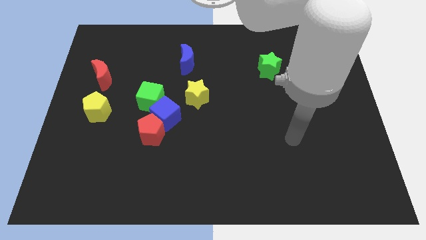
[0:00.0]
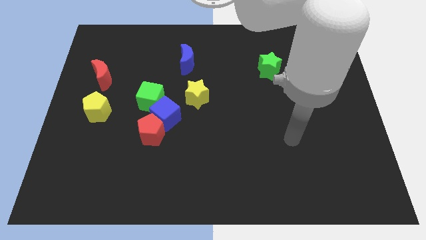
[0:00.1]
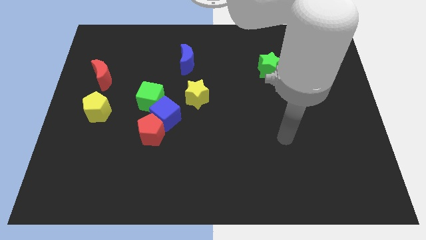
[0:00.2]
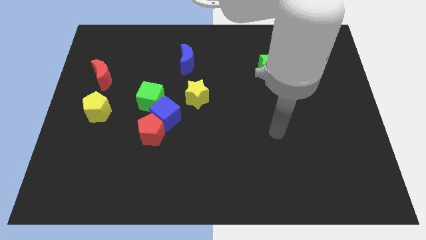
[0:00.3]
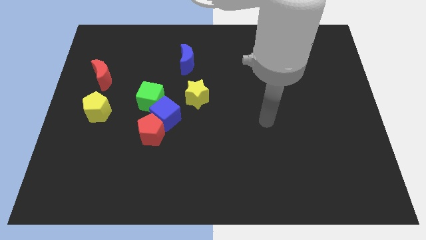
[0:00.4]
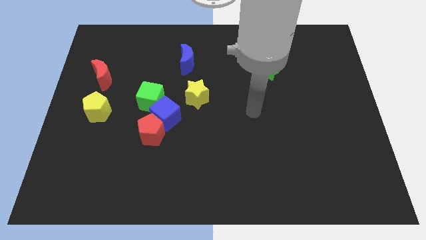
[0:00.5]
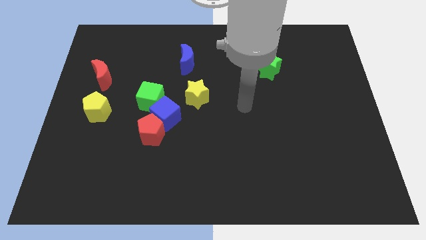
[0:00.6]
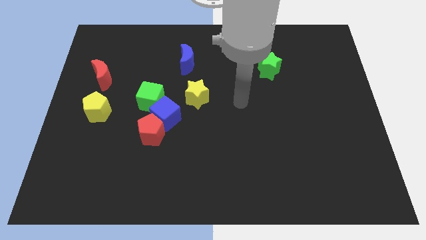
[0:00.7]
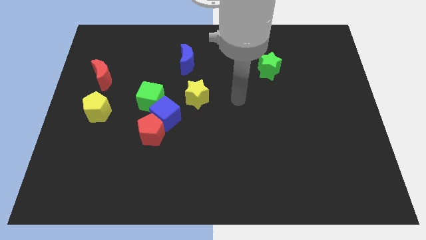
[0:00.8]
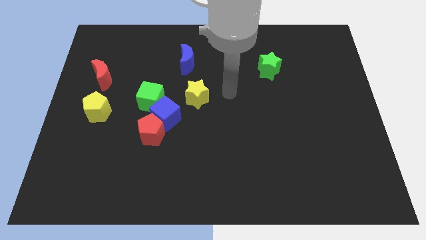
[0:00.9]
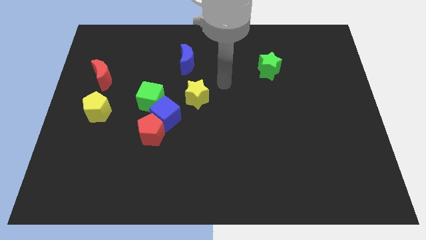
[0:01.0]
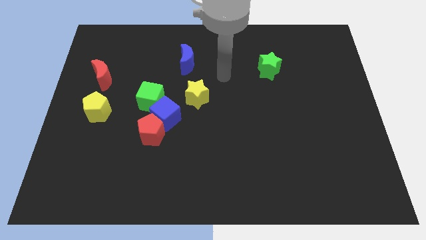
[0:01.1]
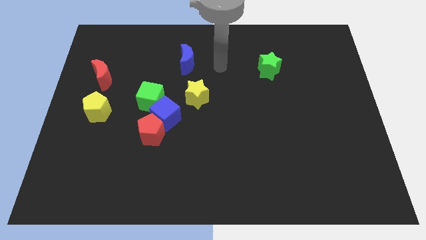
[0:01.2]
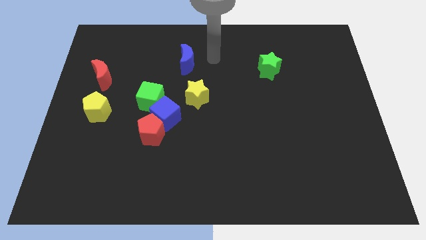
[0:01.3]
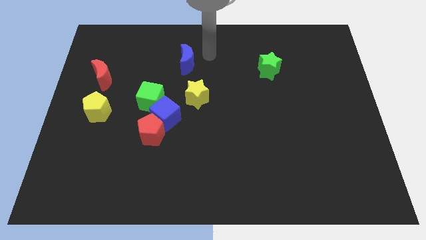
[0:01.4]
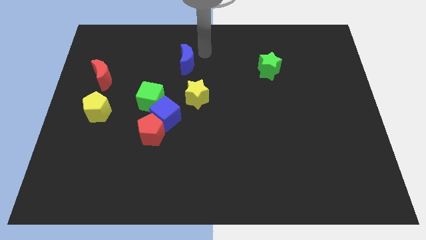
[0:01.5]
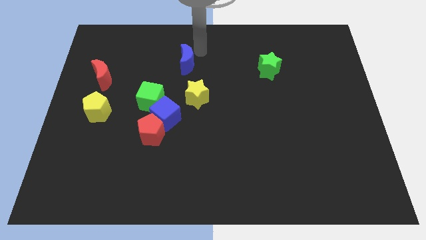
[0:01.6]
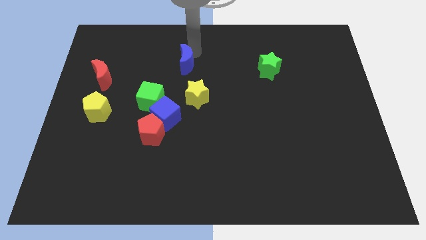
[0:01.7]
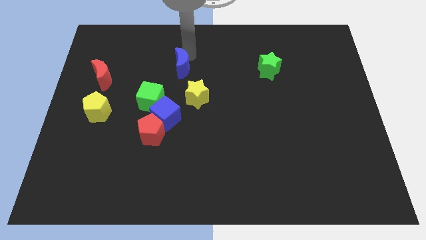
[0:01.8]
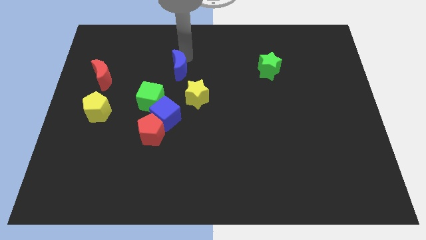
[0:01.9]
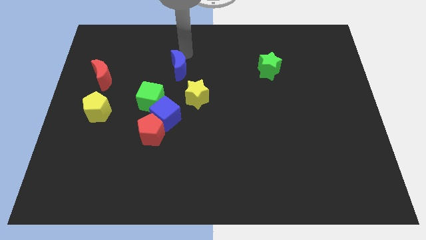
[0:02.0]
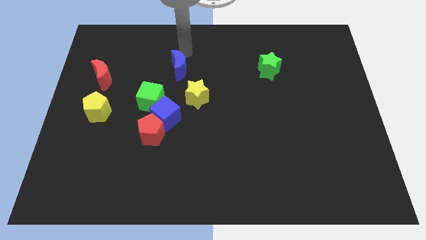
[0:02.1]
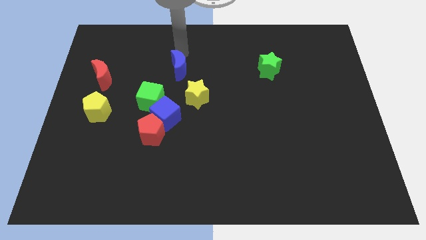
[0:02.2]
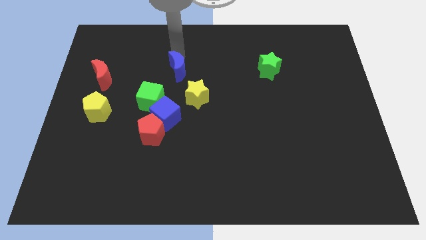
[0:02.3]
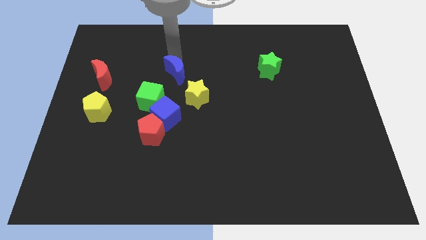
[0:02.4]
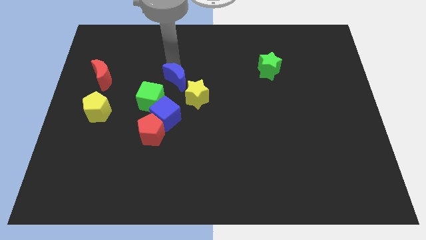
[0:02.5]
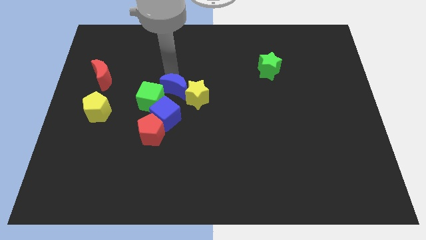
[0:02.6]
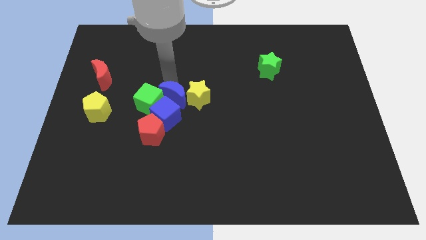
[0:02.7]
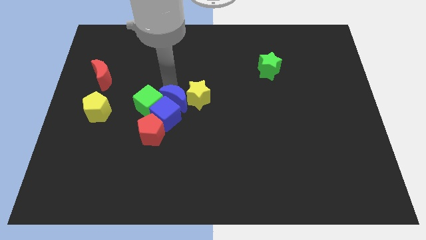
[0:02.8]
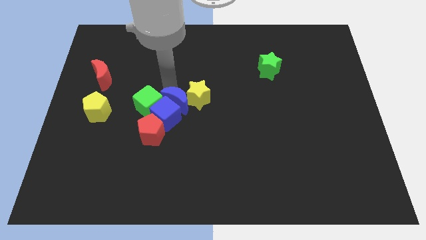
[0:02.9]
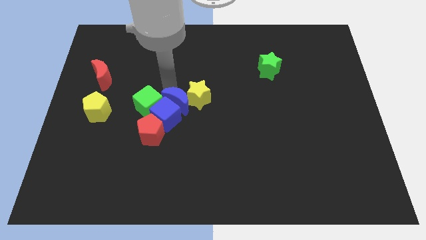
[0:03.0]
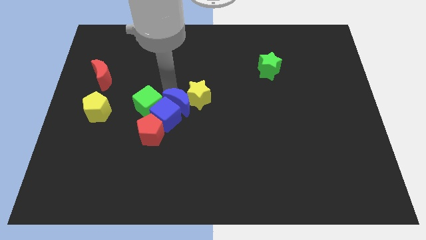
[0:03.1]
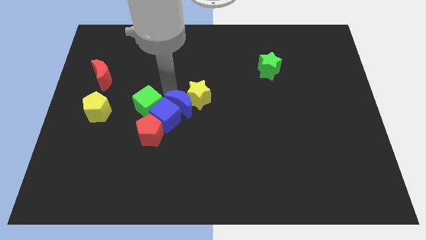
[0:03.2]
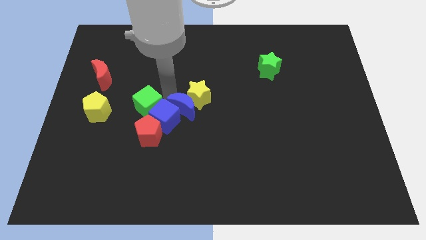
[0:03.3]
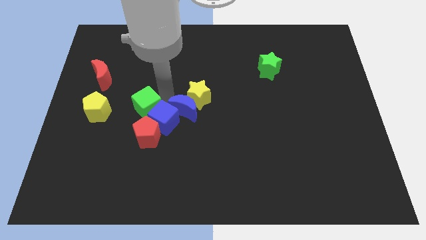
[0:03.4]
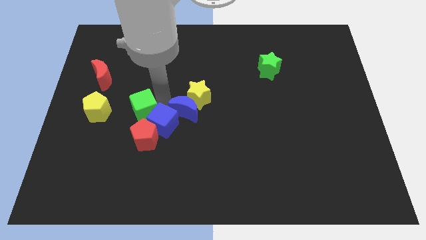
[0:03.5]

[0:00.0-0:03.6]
push the blue crescent into the blue cube

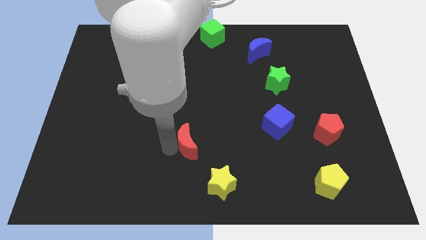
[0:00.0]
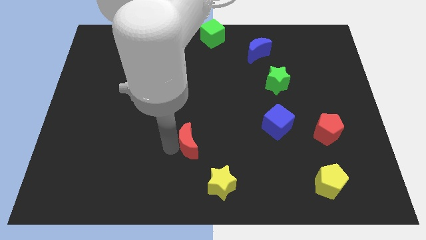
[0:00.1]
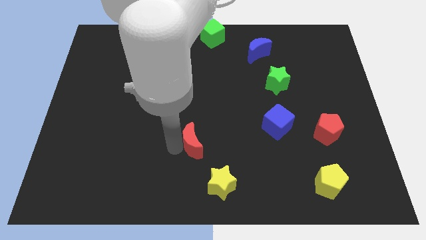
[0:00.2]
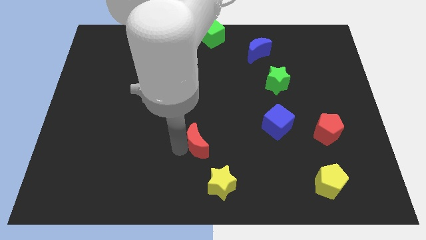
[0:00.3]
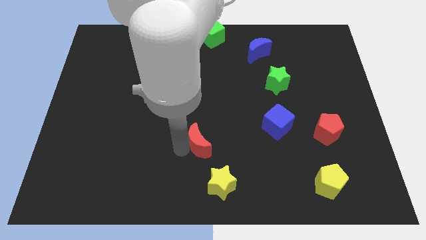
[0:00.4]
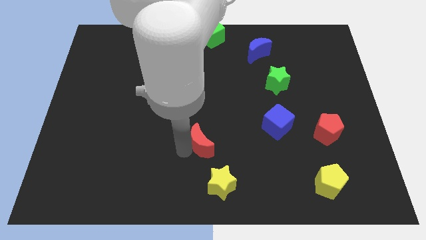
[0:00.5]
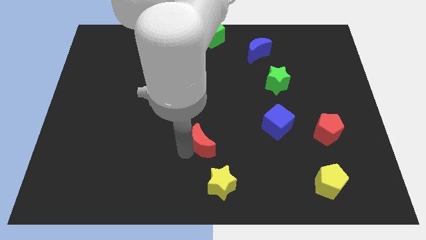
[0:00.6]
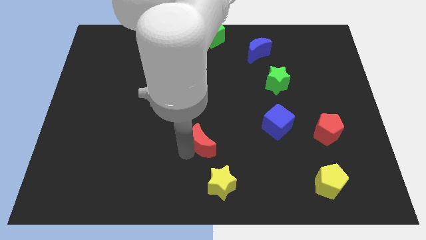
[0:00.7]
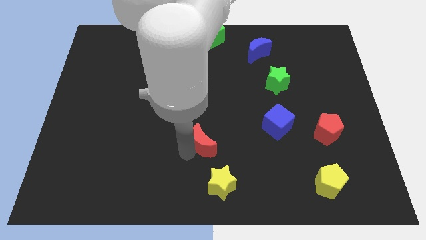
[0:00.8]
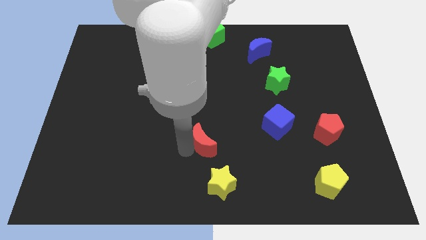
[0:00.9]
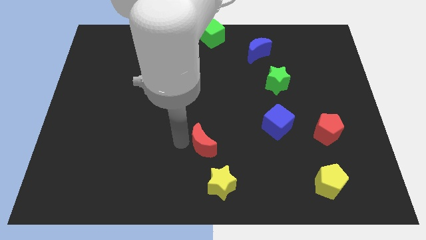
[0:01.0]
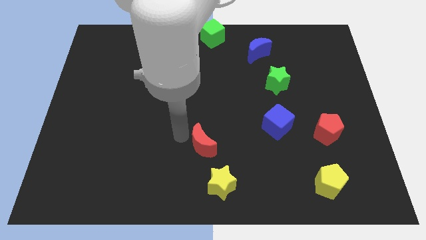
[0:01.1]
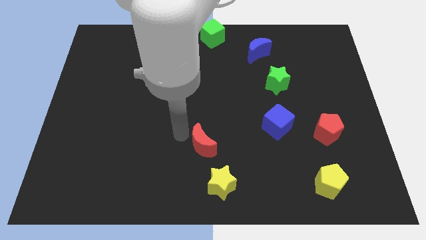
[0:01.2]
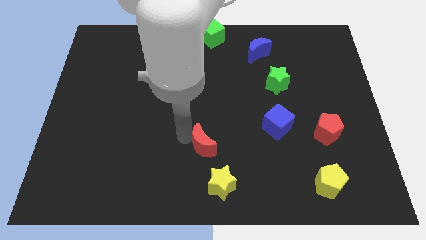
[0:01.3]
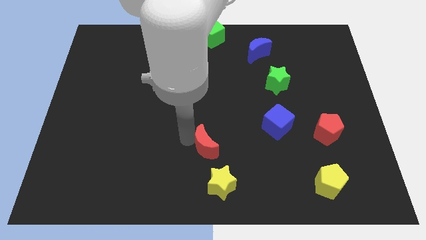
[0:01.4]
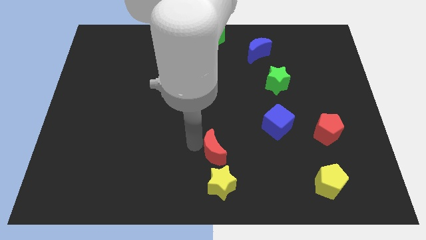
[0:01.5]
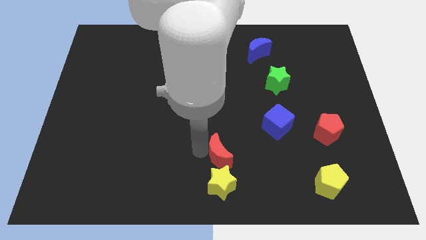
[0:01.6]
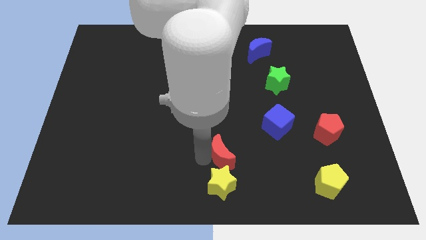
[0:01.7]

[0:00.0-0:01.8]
place the red crescent above the yellow star

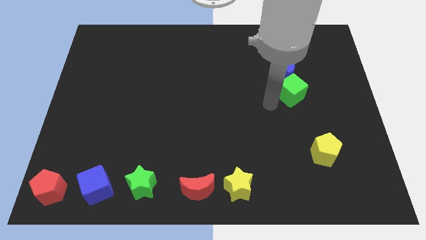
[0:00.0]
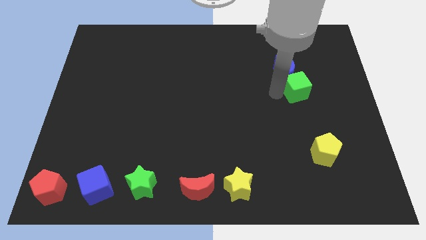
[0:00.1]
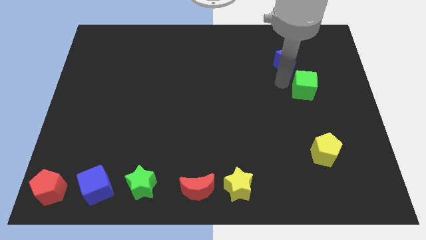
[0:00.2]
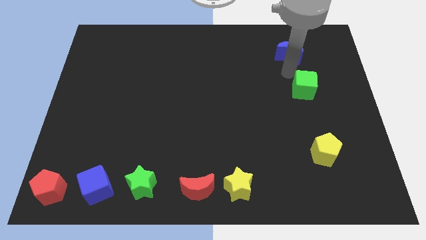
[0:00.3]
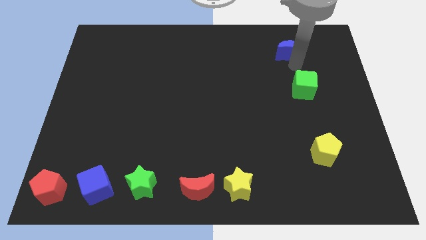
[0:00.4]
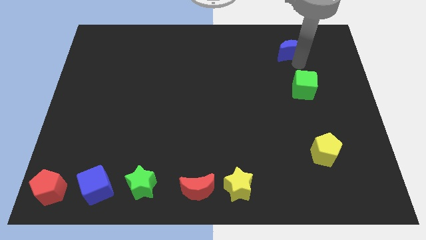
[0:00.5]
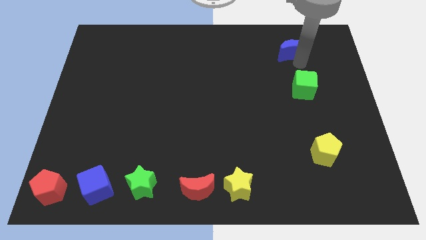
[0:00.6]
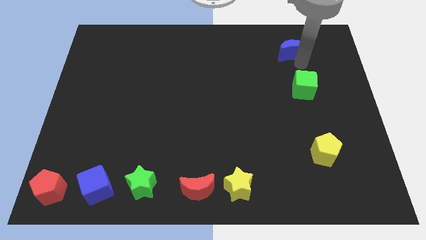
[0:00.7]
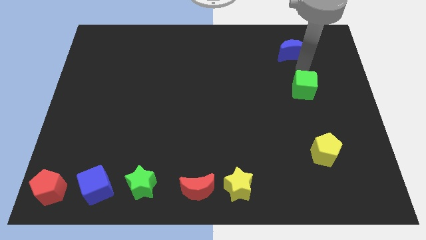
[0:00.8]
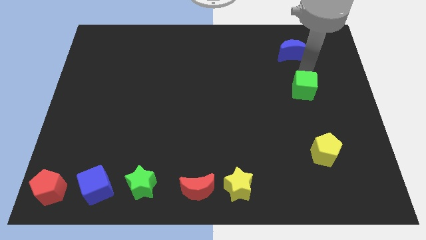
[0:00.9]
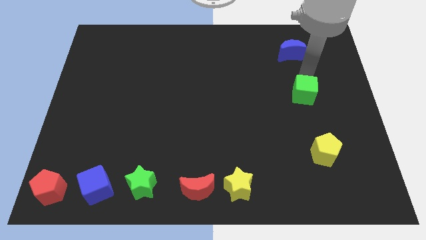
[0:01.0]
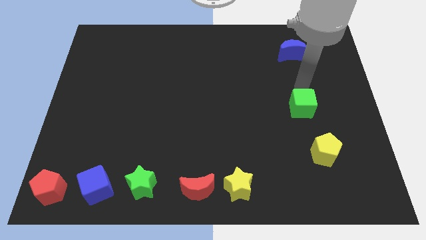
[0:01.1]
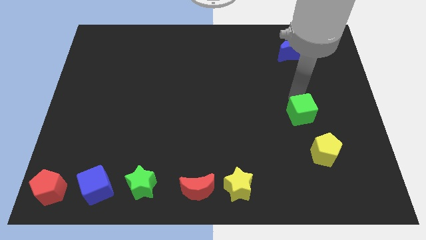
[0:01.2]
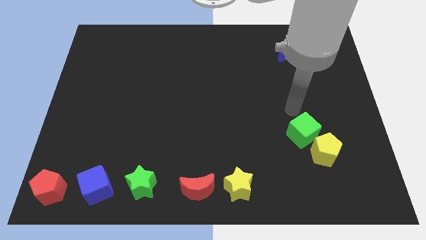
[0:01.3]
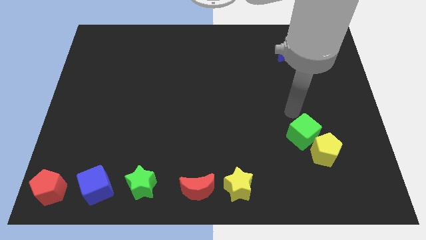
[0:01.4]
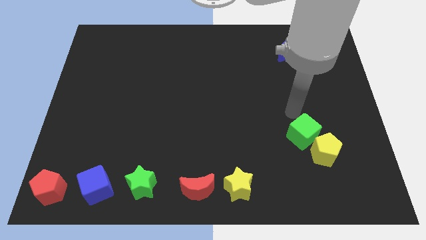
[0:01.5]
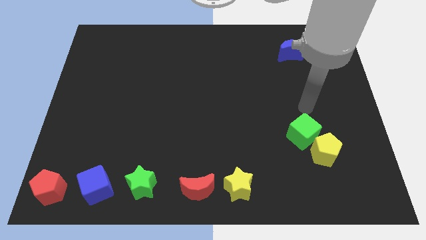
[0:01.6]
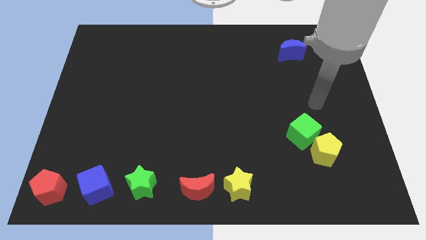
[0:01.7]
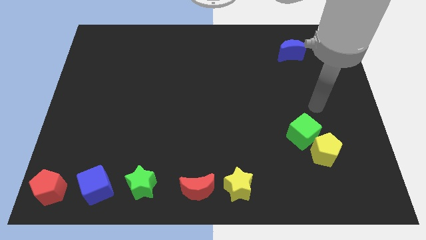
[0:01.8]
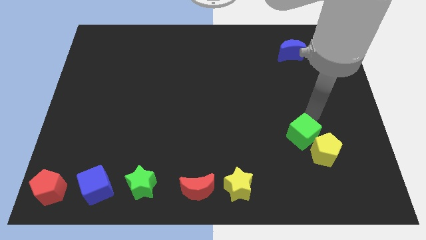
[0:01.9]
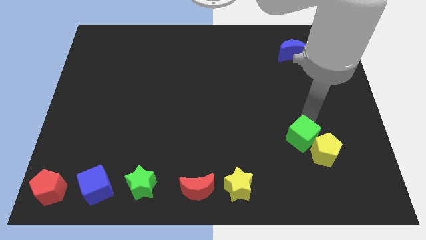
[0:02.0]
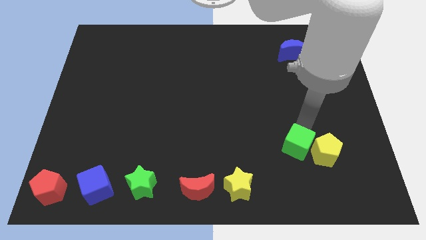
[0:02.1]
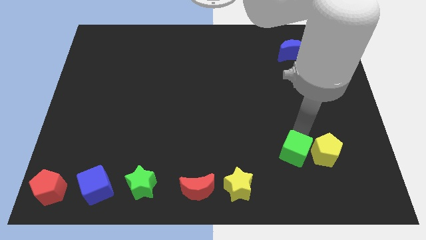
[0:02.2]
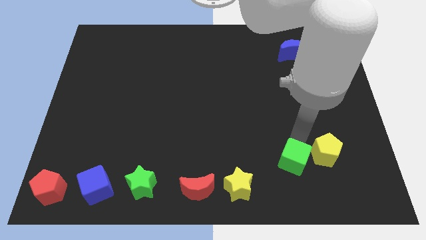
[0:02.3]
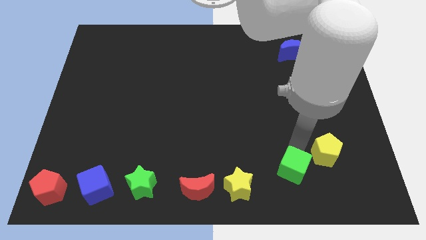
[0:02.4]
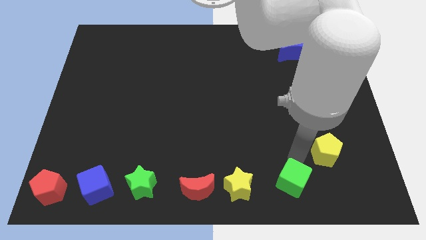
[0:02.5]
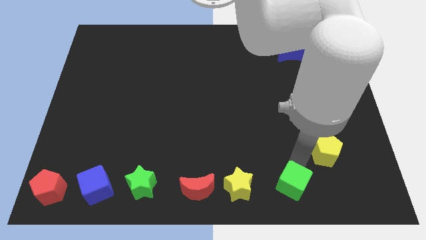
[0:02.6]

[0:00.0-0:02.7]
push green cube to the bottom left of yellow pentagon

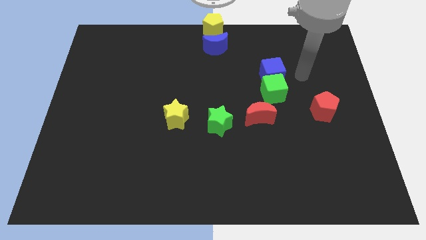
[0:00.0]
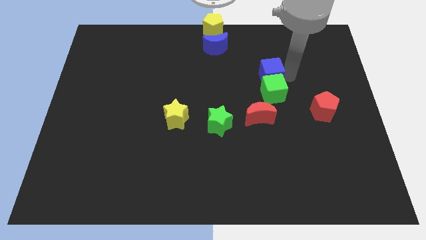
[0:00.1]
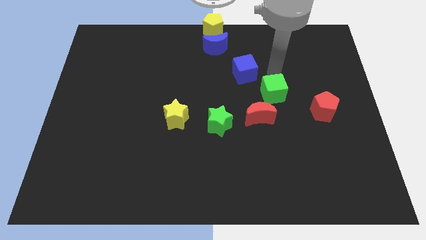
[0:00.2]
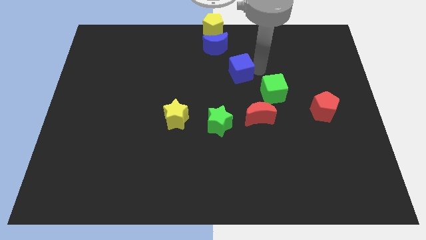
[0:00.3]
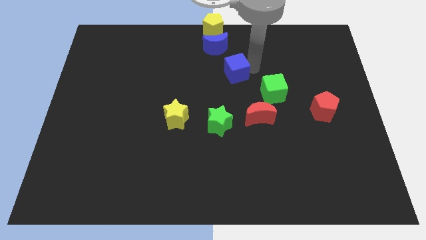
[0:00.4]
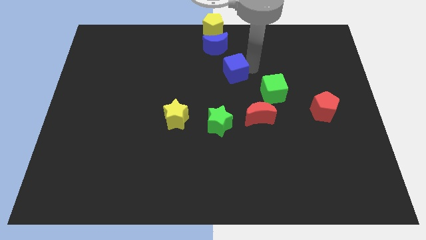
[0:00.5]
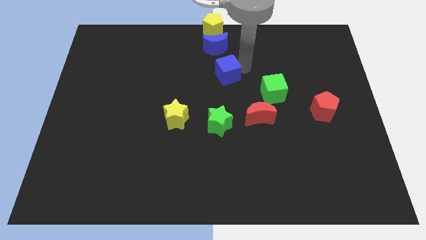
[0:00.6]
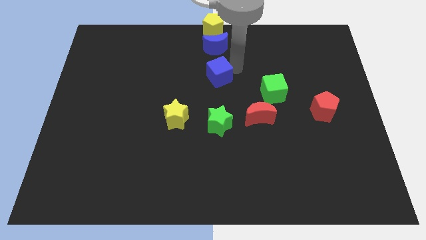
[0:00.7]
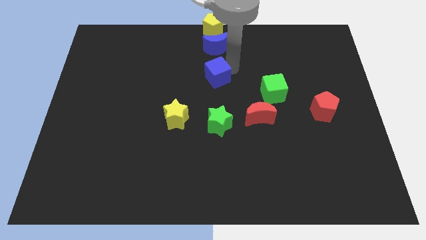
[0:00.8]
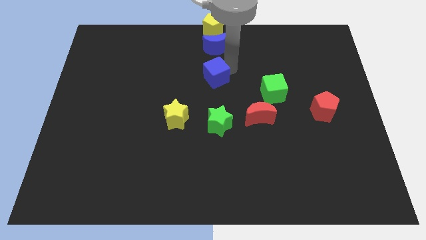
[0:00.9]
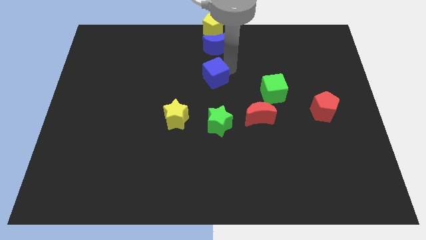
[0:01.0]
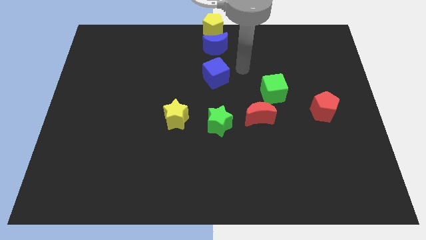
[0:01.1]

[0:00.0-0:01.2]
move the blue cube below blue moon
